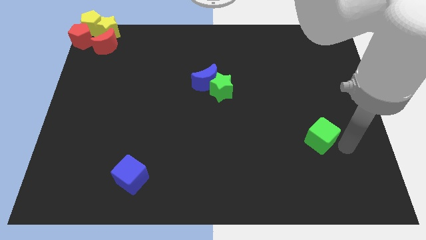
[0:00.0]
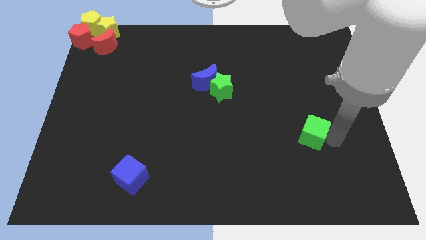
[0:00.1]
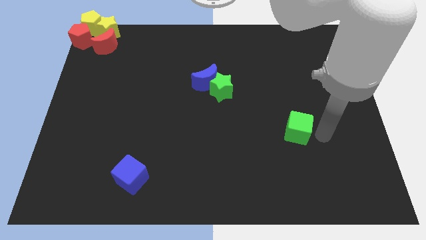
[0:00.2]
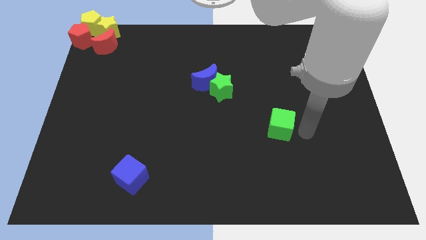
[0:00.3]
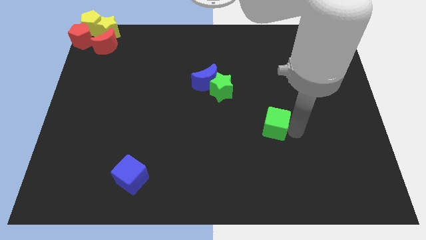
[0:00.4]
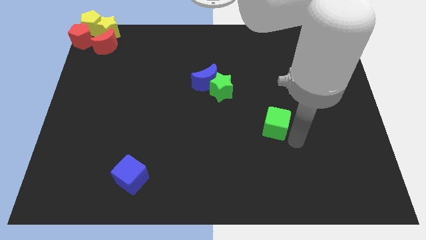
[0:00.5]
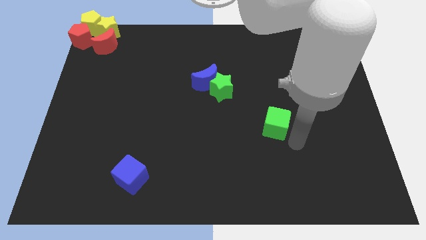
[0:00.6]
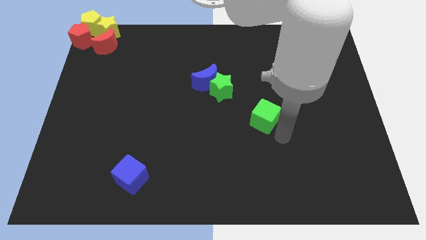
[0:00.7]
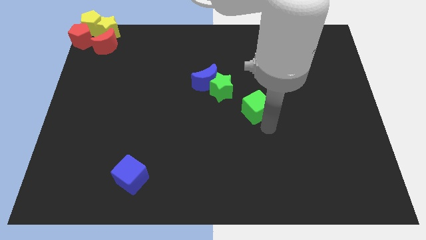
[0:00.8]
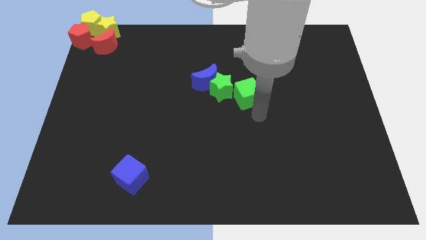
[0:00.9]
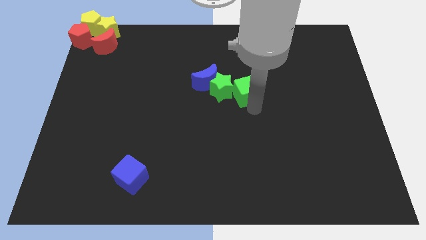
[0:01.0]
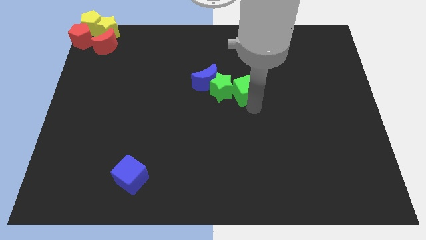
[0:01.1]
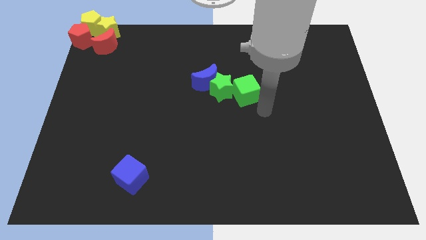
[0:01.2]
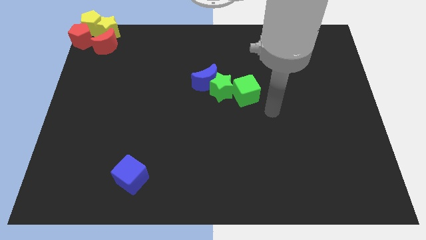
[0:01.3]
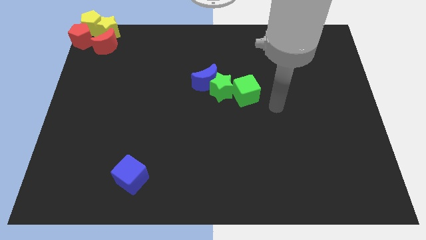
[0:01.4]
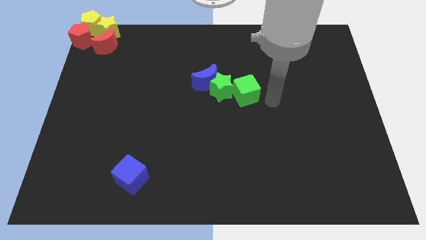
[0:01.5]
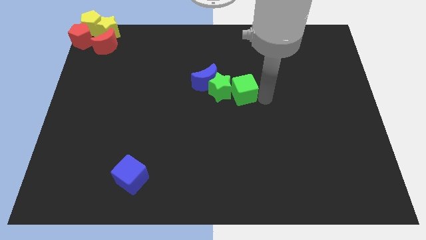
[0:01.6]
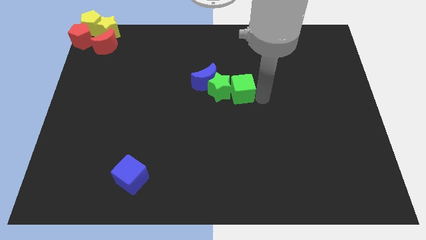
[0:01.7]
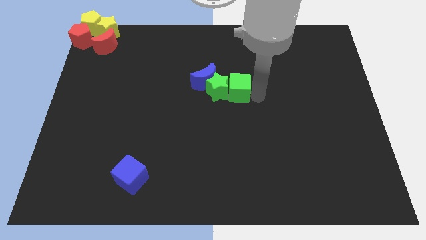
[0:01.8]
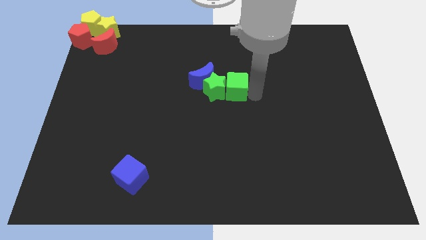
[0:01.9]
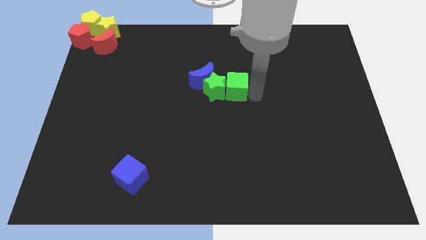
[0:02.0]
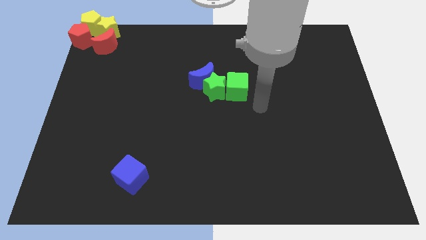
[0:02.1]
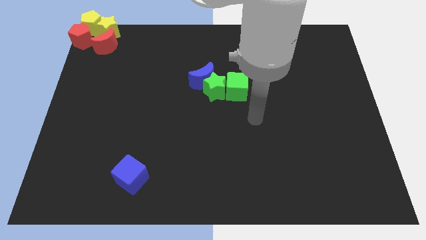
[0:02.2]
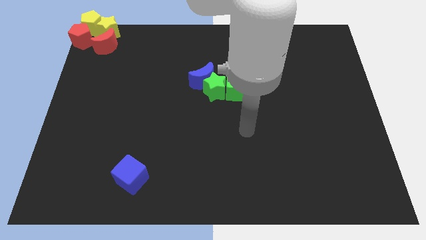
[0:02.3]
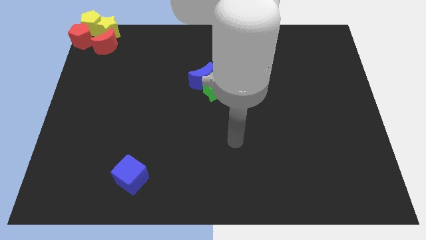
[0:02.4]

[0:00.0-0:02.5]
push green cube into green star

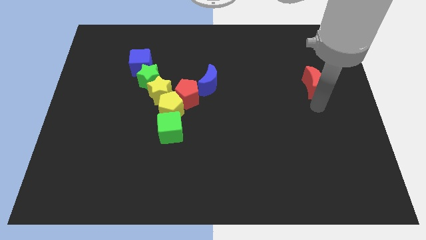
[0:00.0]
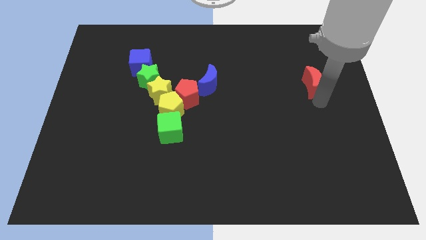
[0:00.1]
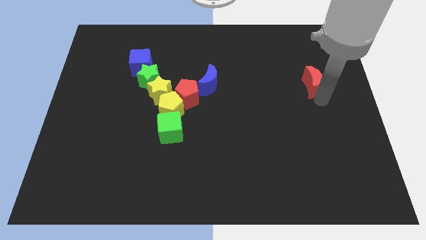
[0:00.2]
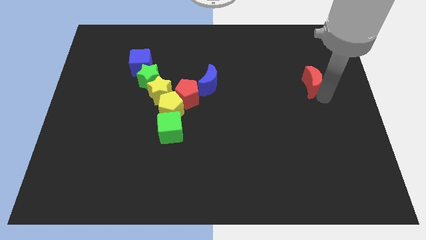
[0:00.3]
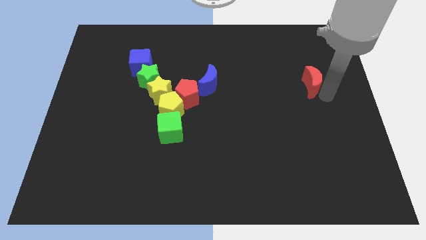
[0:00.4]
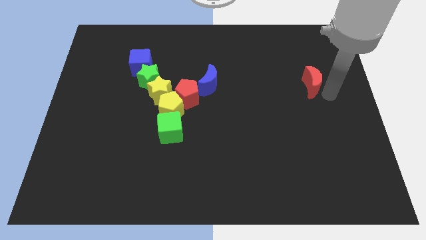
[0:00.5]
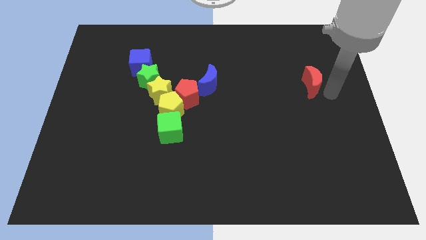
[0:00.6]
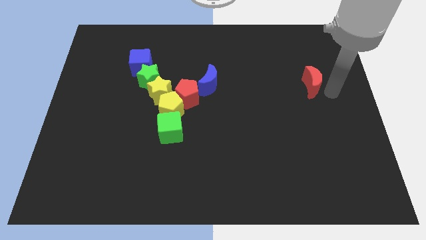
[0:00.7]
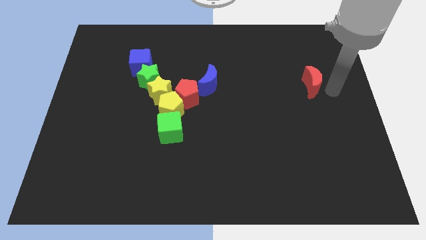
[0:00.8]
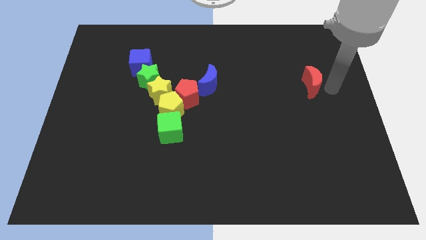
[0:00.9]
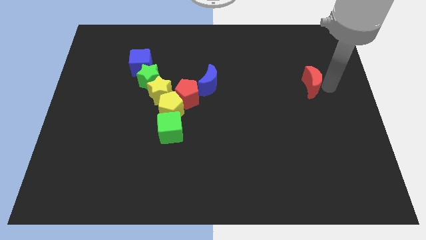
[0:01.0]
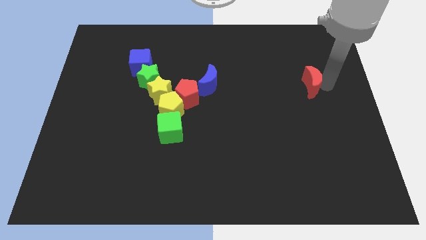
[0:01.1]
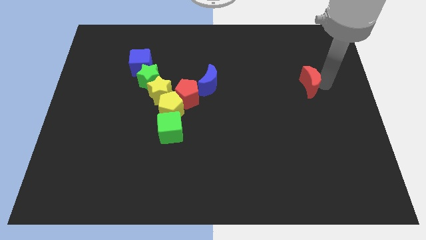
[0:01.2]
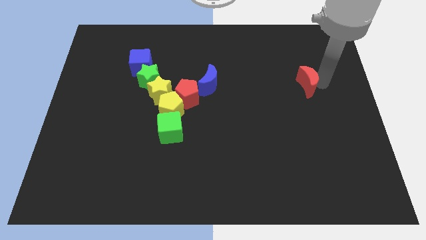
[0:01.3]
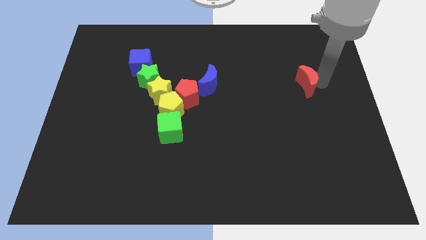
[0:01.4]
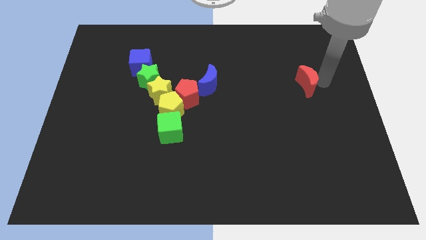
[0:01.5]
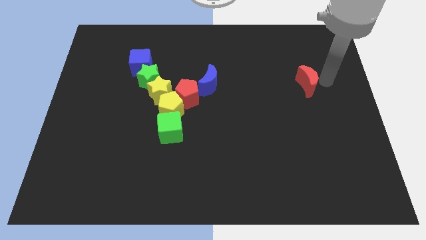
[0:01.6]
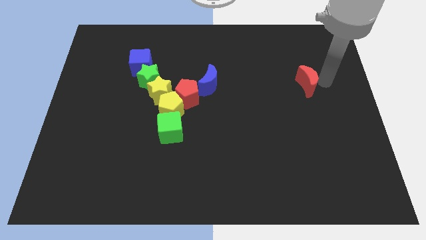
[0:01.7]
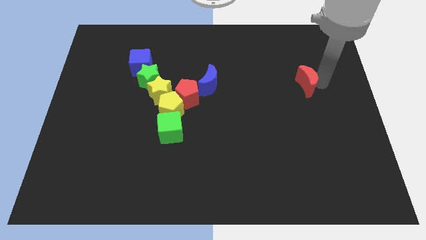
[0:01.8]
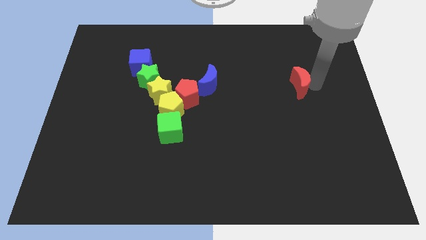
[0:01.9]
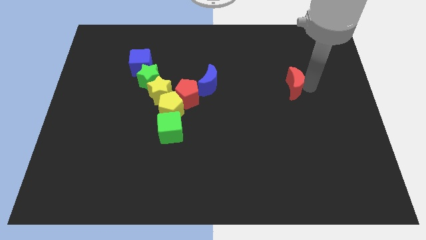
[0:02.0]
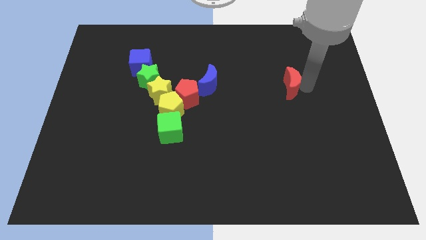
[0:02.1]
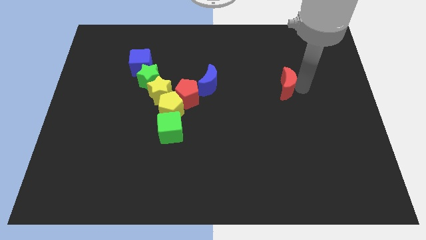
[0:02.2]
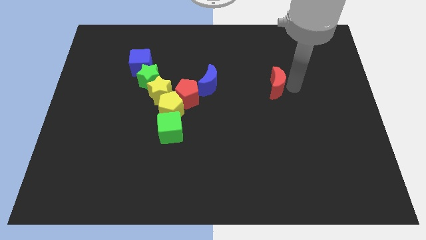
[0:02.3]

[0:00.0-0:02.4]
push the red moon to the right of the blue moon

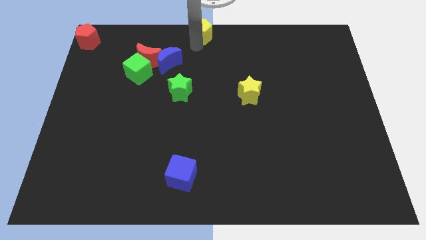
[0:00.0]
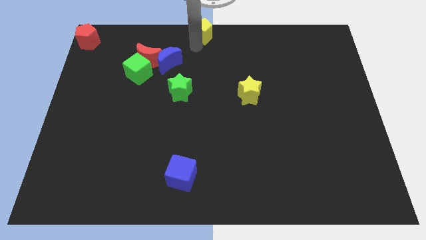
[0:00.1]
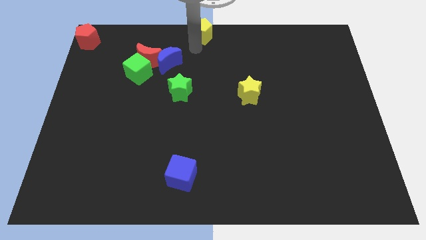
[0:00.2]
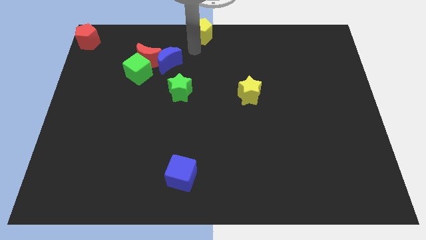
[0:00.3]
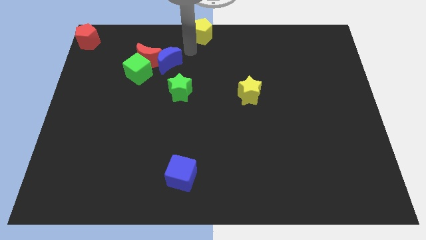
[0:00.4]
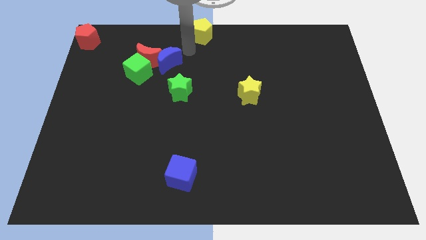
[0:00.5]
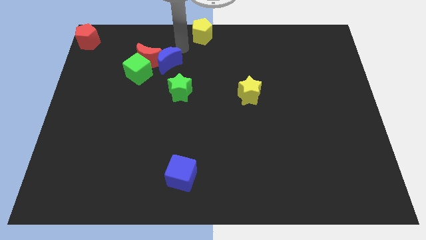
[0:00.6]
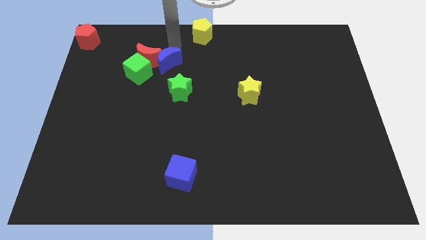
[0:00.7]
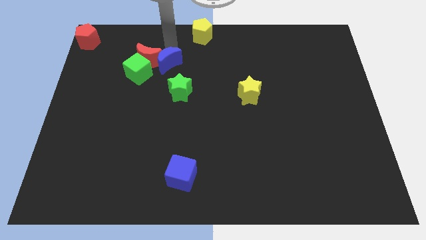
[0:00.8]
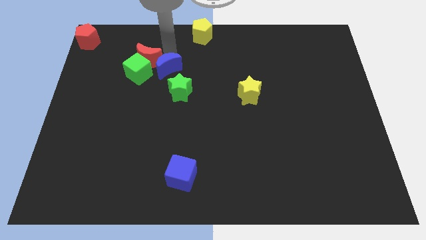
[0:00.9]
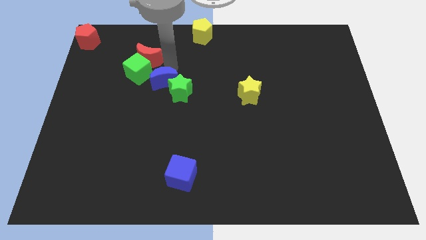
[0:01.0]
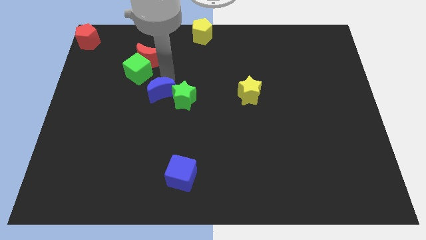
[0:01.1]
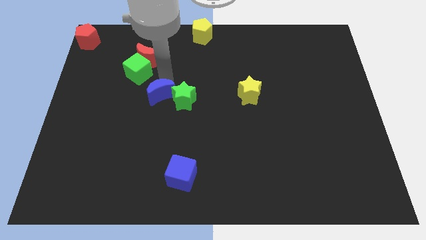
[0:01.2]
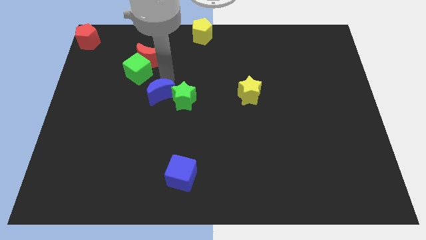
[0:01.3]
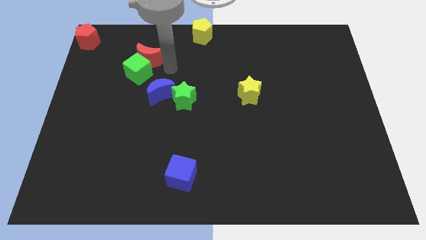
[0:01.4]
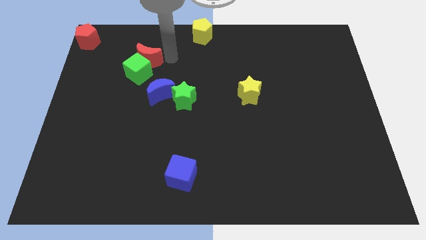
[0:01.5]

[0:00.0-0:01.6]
push the green star slightly with blue moon

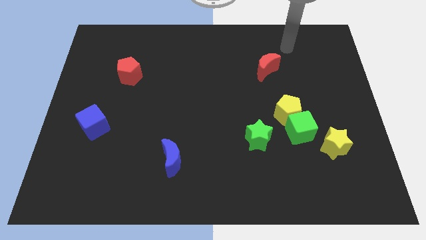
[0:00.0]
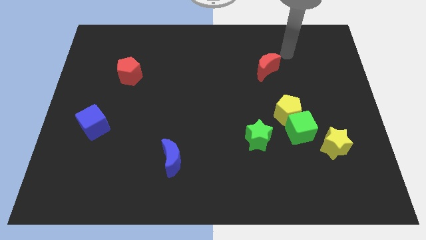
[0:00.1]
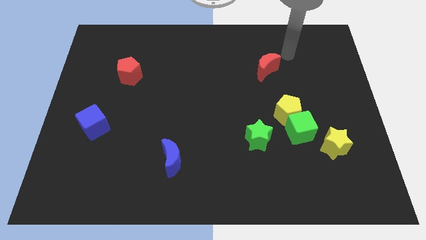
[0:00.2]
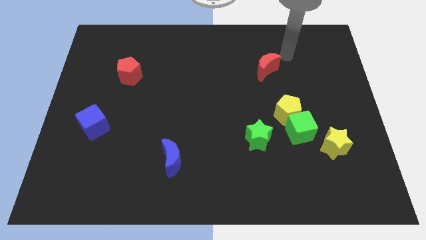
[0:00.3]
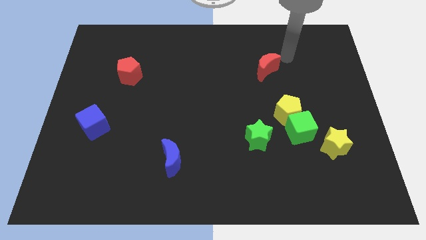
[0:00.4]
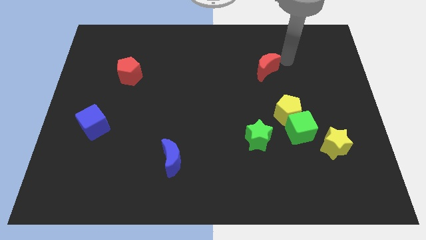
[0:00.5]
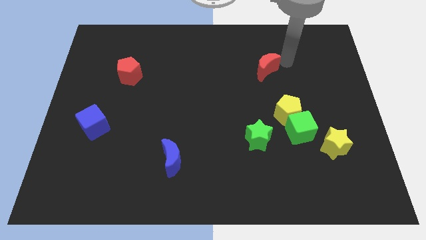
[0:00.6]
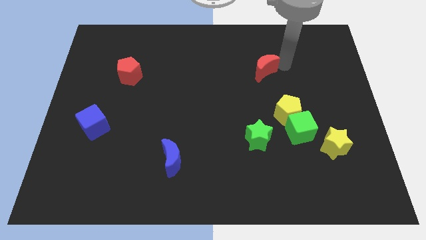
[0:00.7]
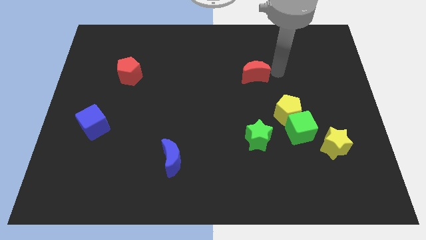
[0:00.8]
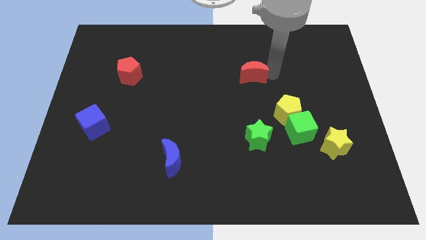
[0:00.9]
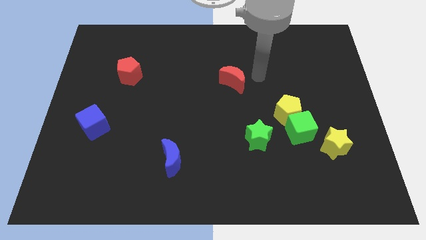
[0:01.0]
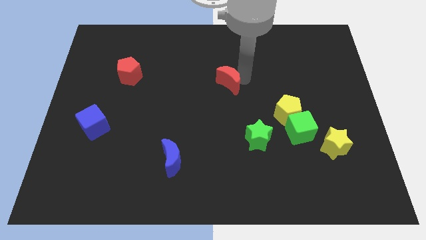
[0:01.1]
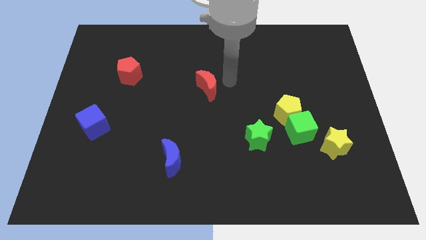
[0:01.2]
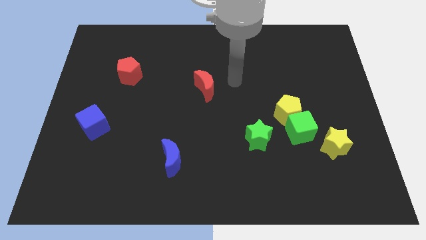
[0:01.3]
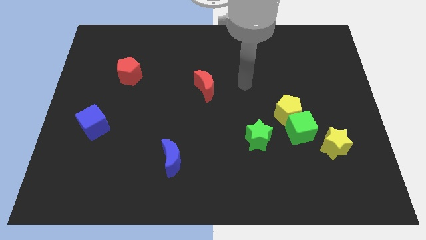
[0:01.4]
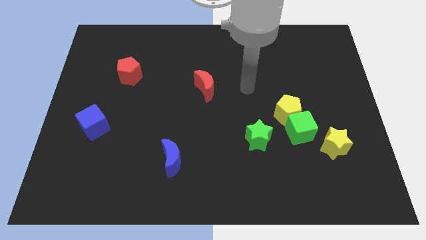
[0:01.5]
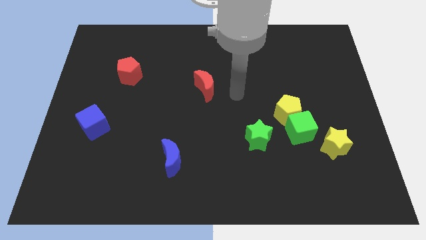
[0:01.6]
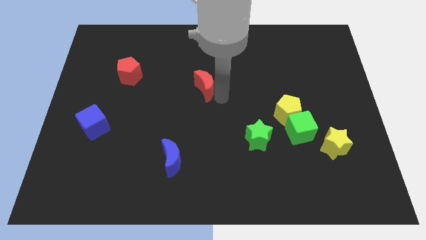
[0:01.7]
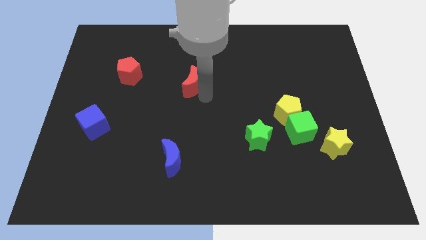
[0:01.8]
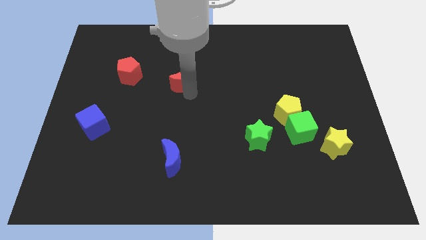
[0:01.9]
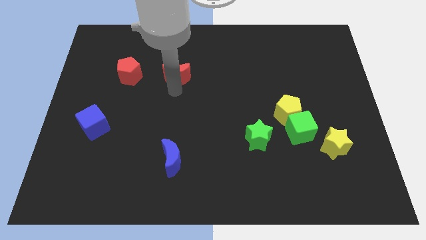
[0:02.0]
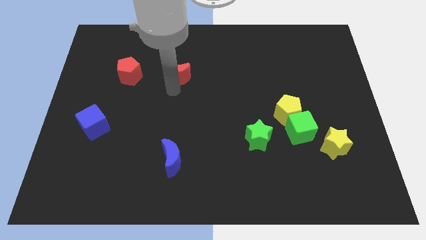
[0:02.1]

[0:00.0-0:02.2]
slide the red moon towards the red pentagon

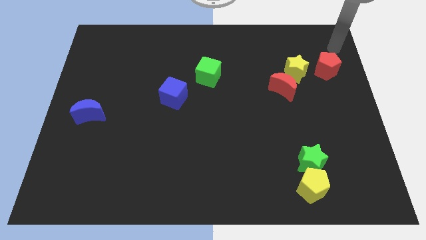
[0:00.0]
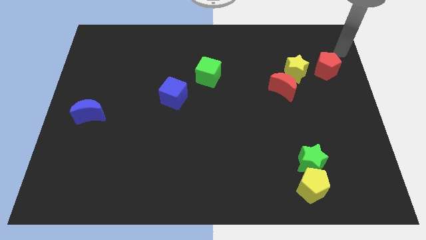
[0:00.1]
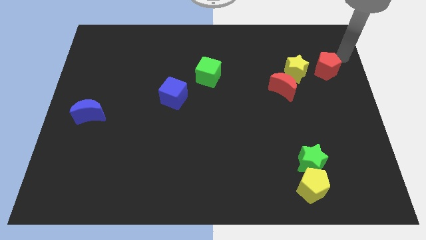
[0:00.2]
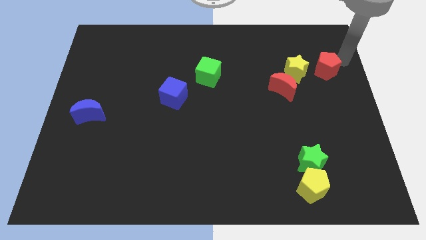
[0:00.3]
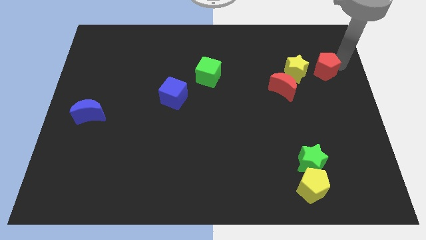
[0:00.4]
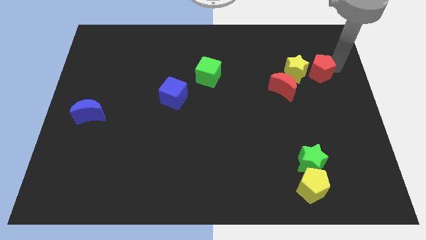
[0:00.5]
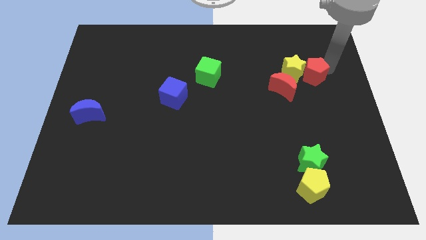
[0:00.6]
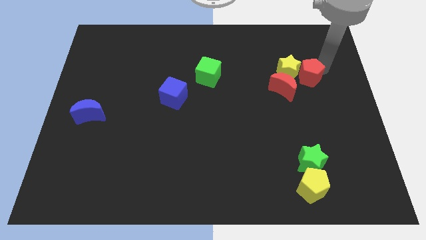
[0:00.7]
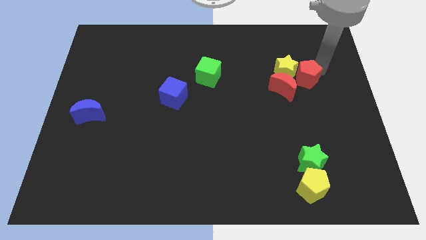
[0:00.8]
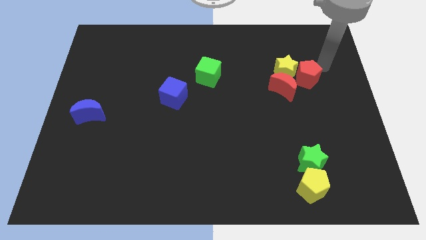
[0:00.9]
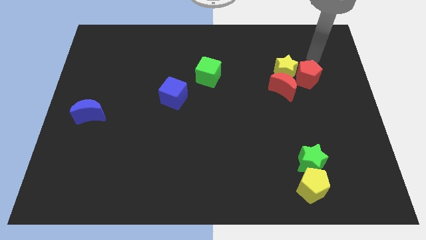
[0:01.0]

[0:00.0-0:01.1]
push red pentagon towards red moon
